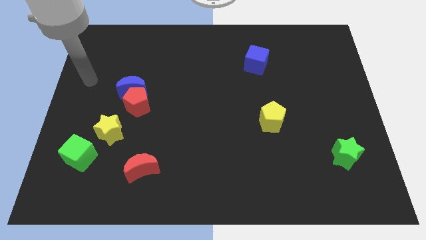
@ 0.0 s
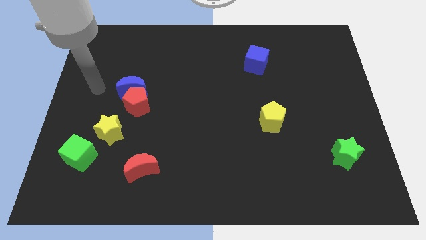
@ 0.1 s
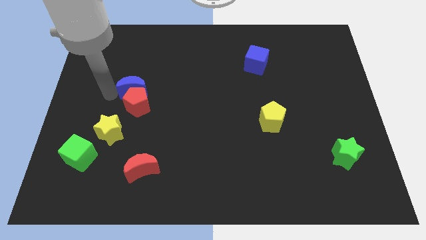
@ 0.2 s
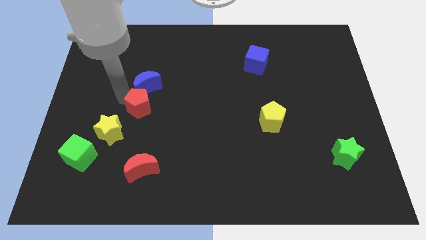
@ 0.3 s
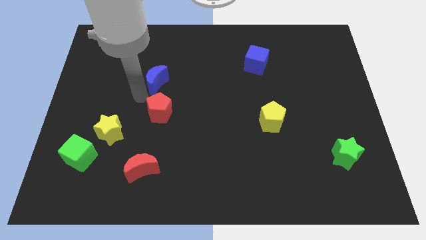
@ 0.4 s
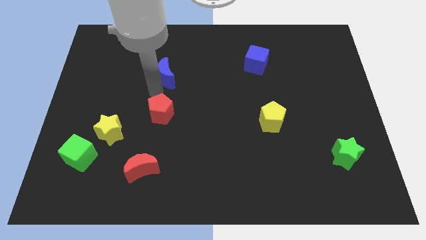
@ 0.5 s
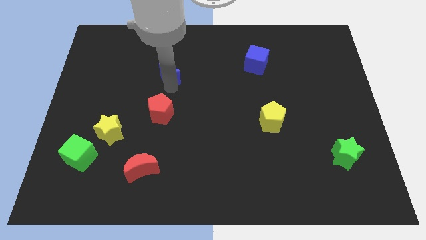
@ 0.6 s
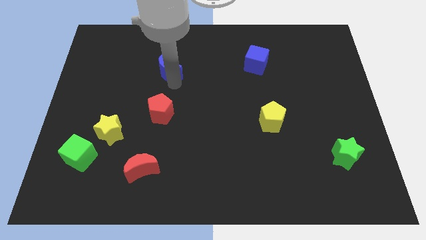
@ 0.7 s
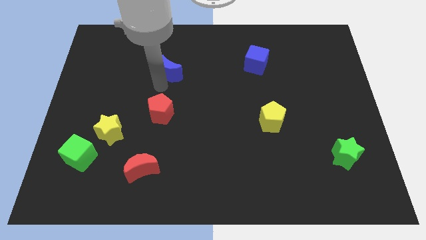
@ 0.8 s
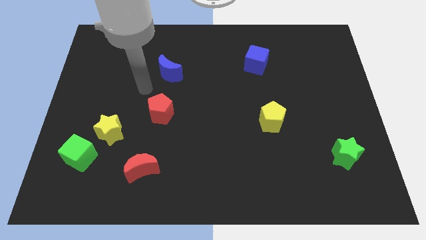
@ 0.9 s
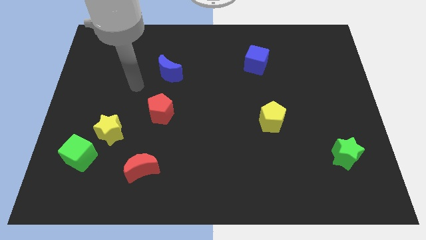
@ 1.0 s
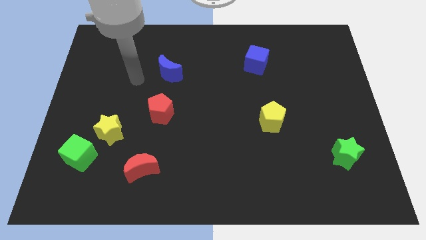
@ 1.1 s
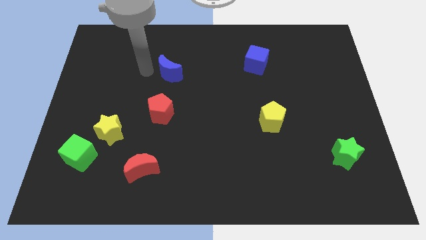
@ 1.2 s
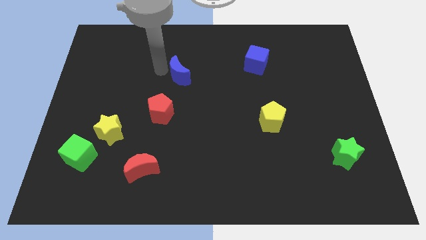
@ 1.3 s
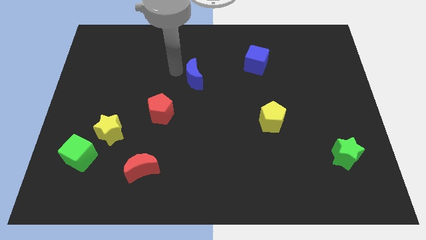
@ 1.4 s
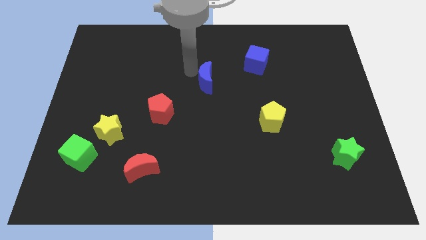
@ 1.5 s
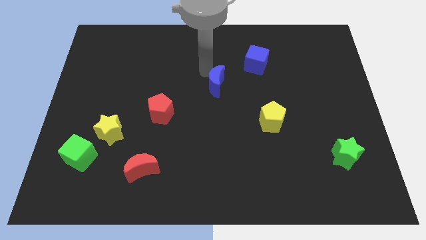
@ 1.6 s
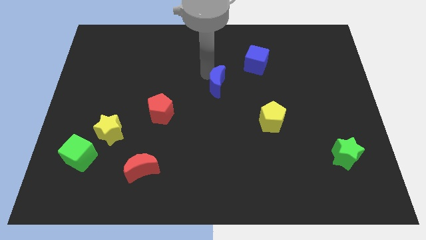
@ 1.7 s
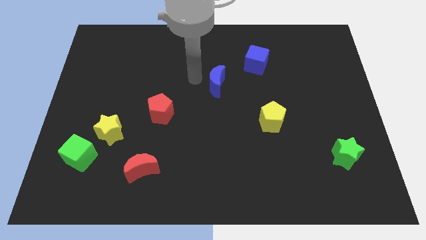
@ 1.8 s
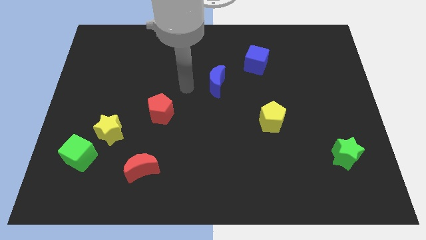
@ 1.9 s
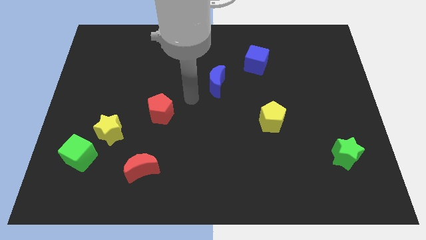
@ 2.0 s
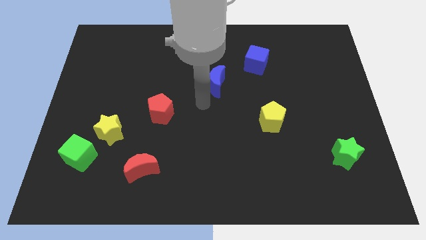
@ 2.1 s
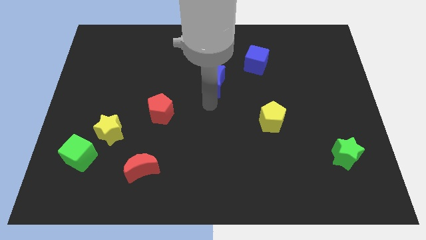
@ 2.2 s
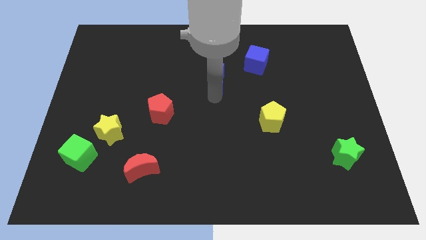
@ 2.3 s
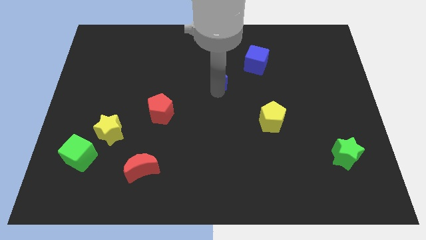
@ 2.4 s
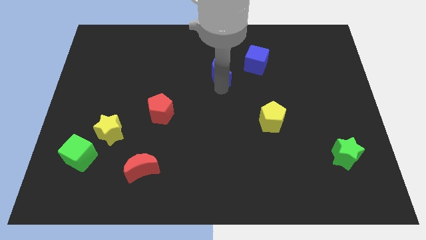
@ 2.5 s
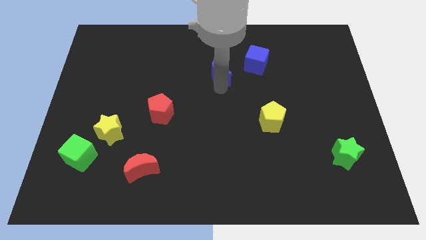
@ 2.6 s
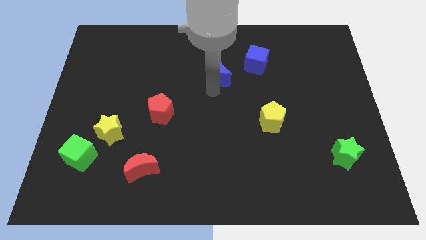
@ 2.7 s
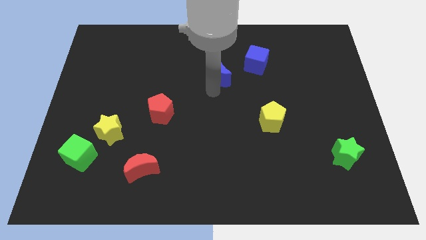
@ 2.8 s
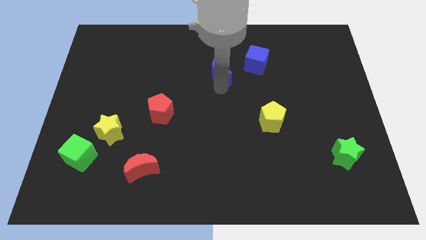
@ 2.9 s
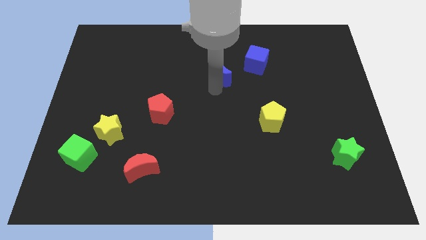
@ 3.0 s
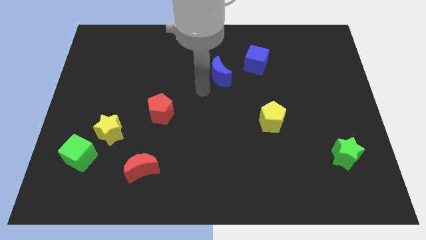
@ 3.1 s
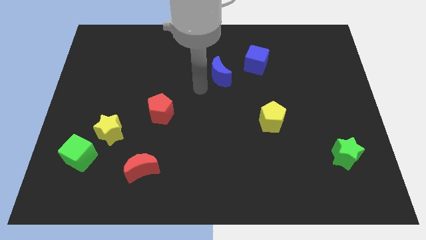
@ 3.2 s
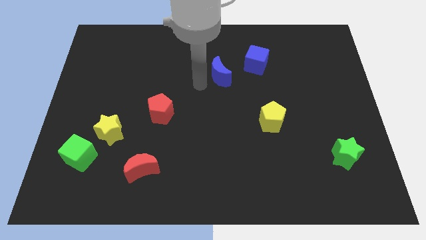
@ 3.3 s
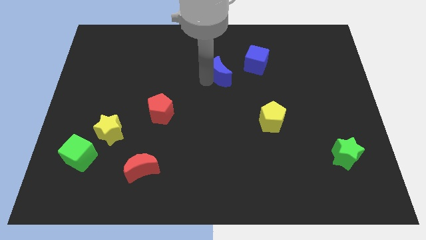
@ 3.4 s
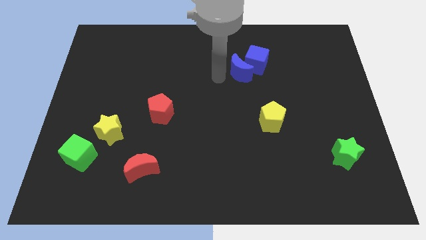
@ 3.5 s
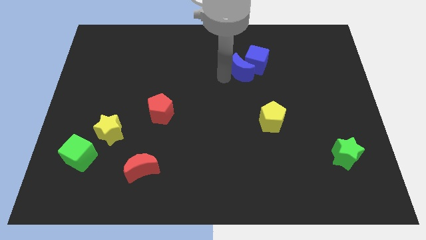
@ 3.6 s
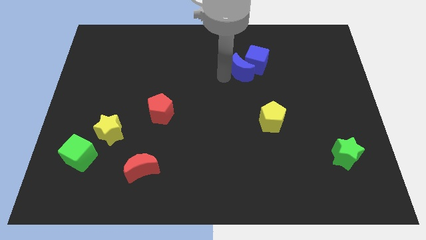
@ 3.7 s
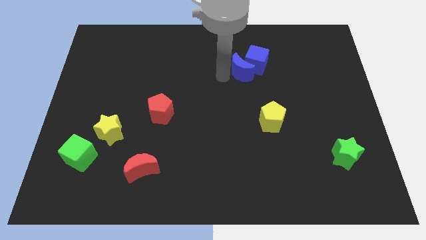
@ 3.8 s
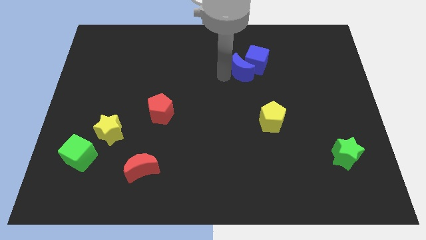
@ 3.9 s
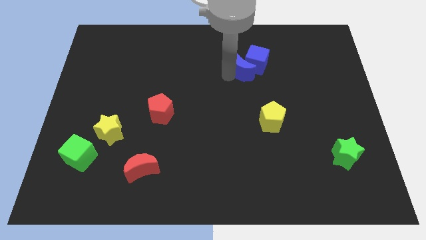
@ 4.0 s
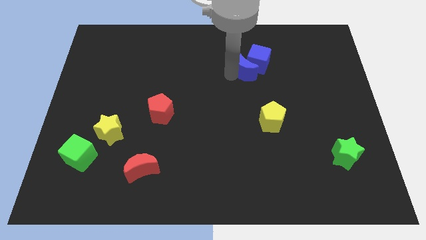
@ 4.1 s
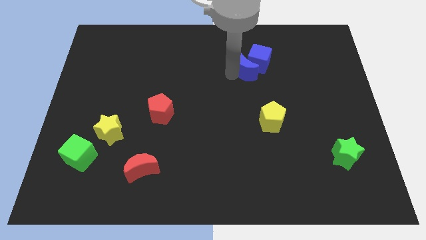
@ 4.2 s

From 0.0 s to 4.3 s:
move the blue crescent into the blue cube

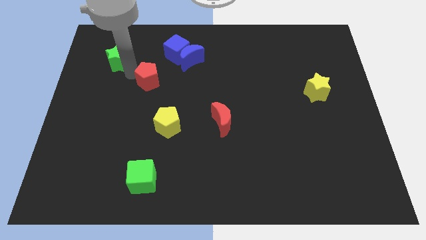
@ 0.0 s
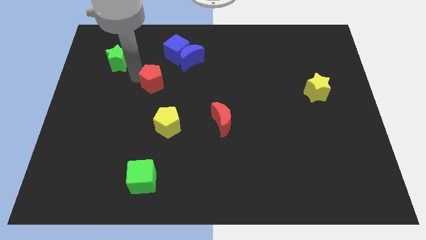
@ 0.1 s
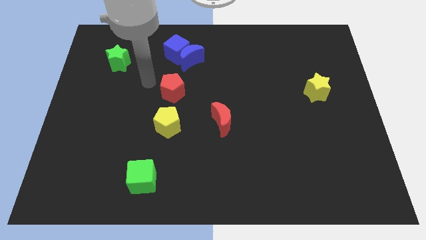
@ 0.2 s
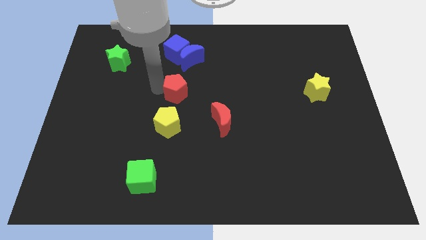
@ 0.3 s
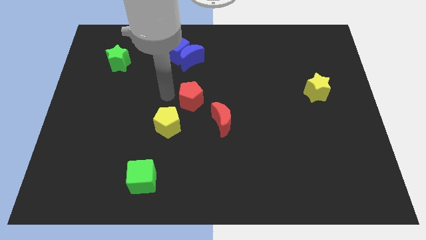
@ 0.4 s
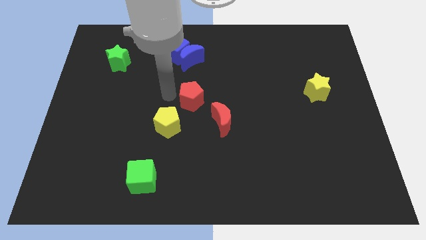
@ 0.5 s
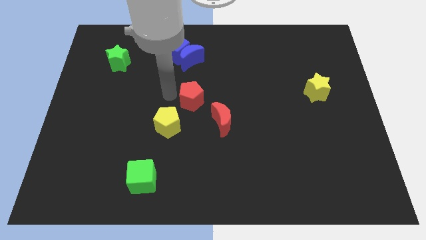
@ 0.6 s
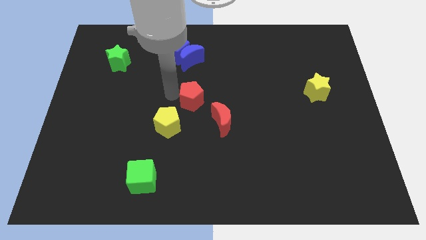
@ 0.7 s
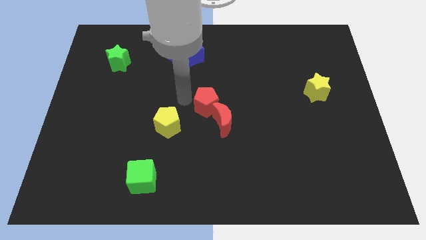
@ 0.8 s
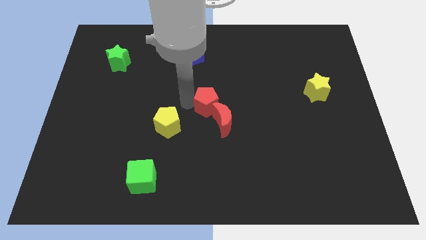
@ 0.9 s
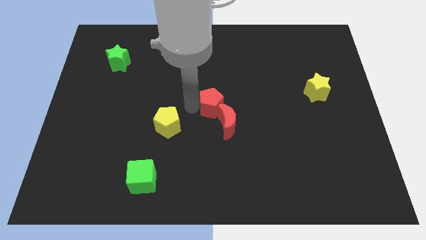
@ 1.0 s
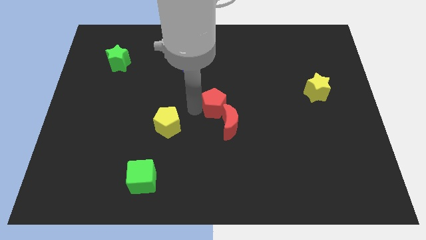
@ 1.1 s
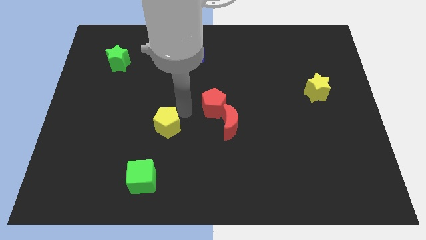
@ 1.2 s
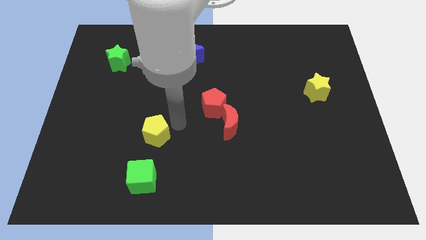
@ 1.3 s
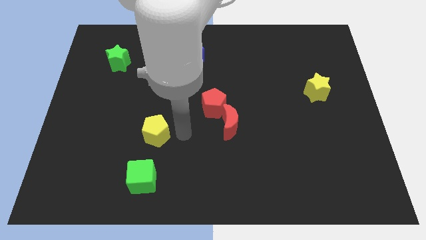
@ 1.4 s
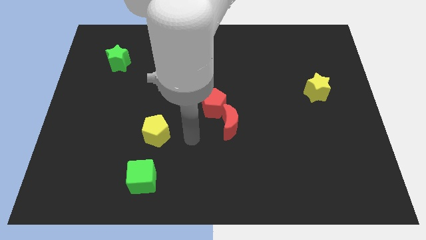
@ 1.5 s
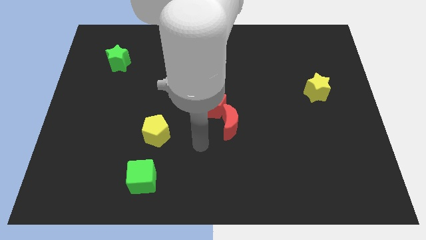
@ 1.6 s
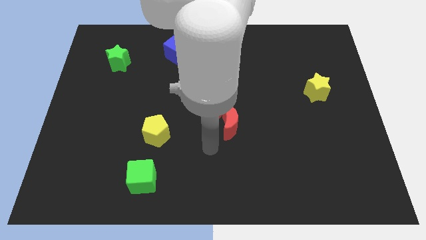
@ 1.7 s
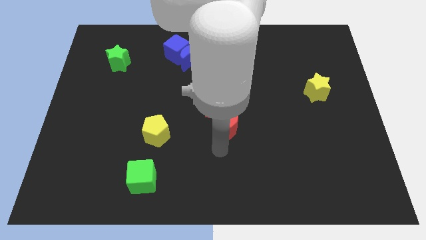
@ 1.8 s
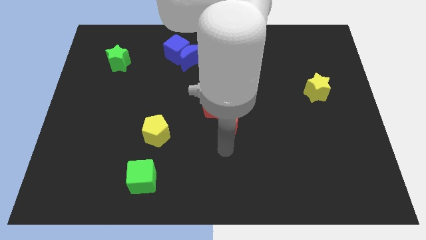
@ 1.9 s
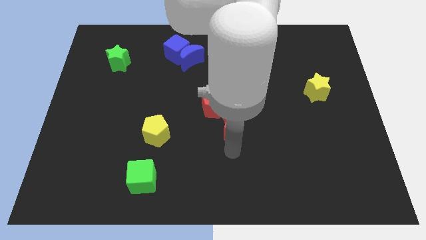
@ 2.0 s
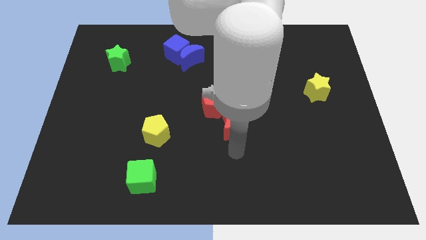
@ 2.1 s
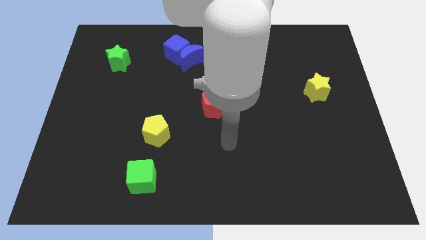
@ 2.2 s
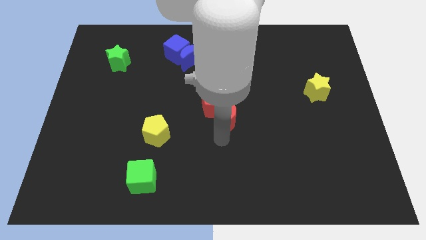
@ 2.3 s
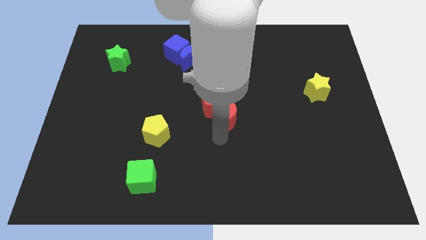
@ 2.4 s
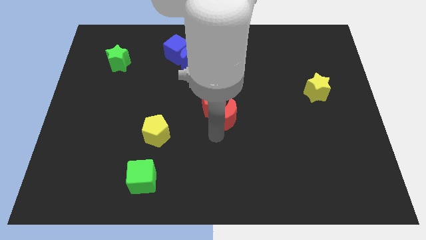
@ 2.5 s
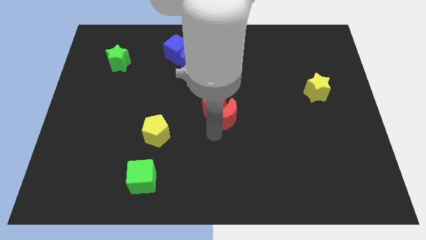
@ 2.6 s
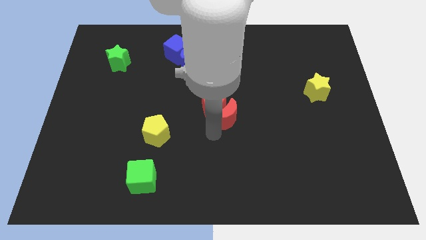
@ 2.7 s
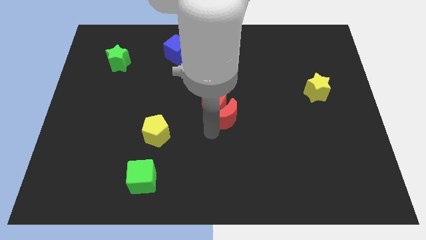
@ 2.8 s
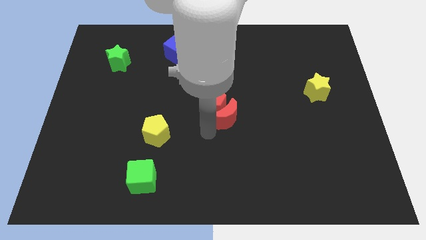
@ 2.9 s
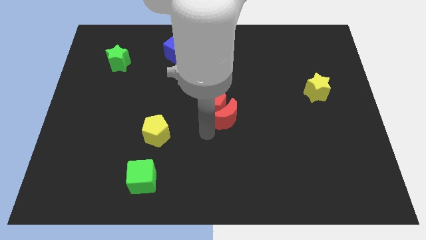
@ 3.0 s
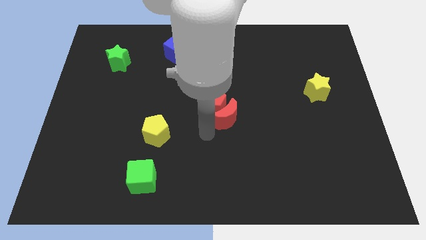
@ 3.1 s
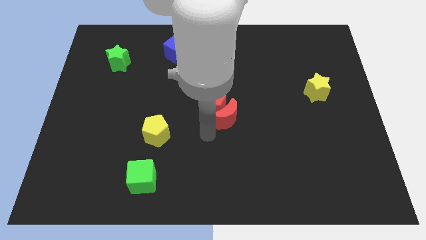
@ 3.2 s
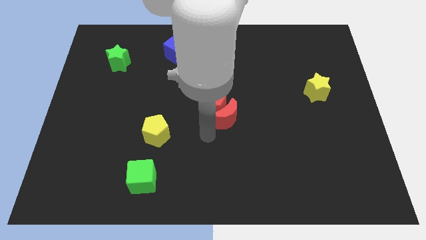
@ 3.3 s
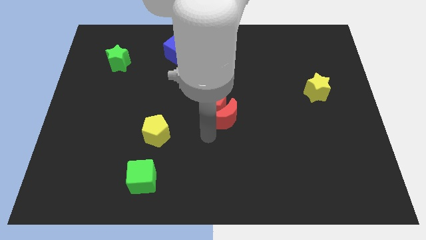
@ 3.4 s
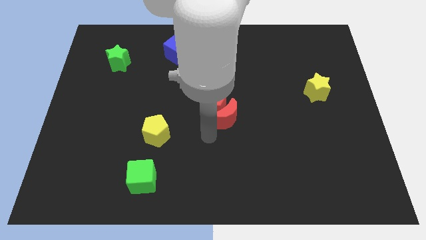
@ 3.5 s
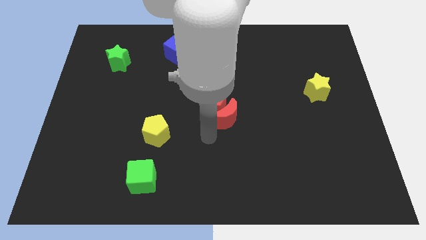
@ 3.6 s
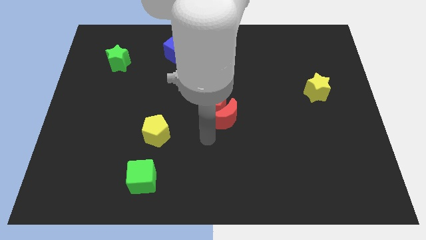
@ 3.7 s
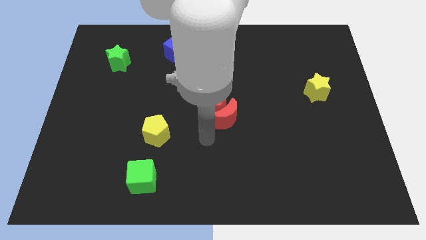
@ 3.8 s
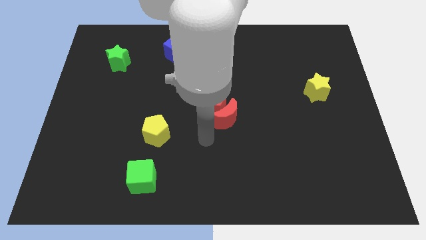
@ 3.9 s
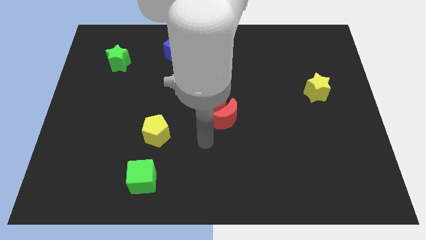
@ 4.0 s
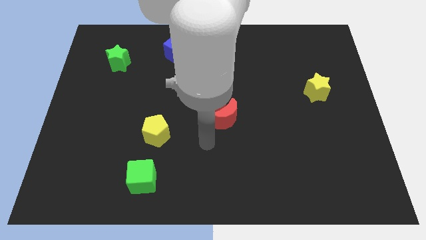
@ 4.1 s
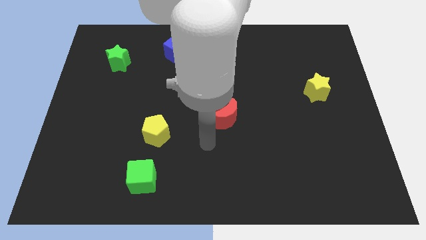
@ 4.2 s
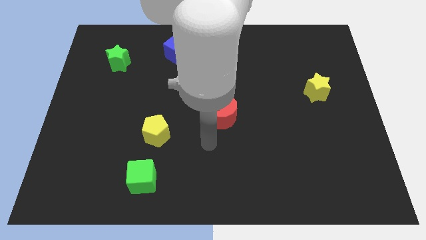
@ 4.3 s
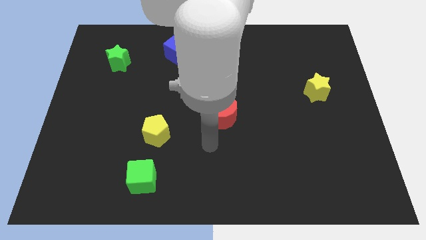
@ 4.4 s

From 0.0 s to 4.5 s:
place both the red blocks at the center of the board
